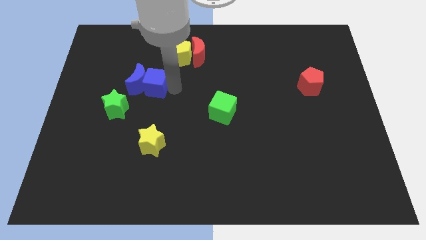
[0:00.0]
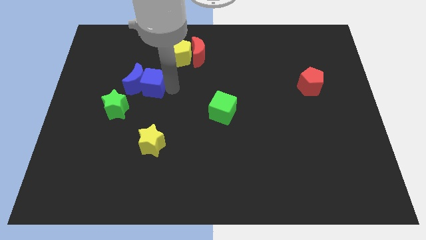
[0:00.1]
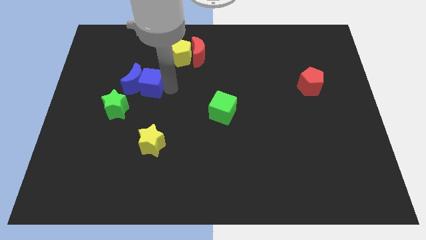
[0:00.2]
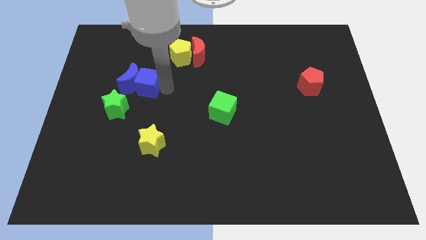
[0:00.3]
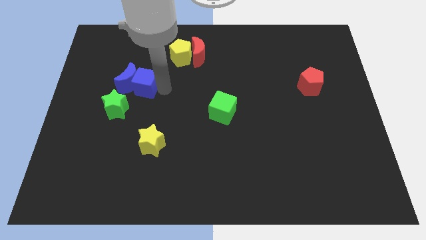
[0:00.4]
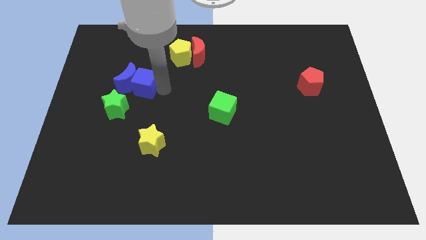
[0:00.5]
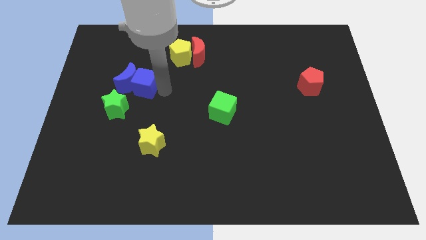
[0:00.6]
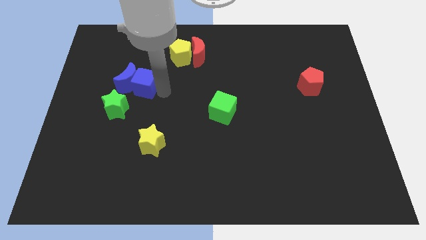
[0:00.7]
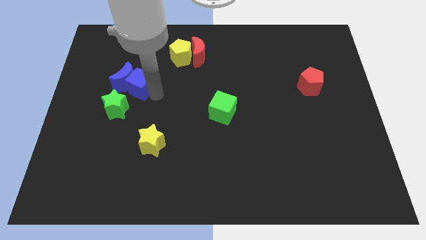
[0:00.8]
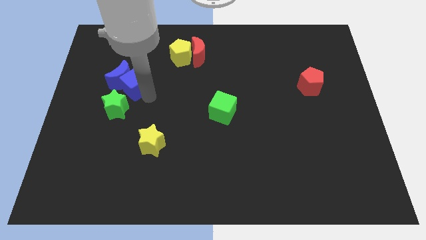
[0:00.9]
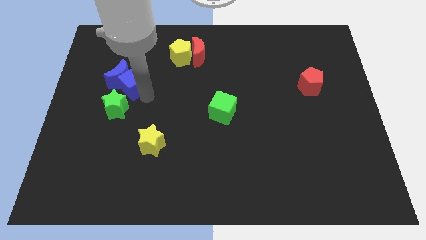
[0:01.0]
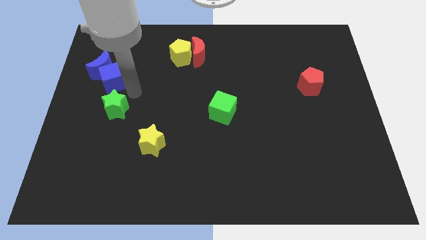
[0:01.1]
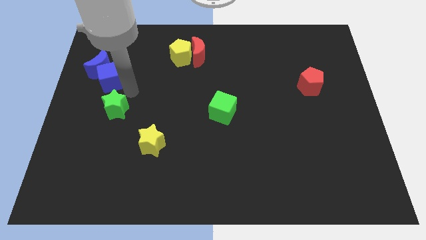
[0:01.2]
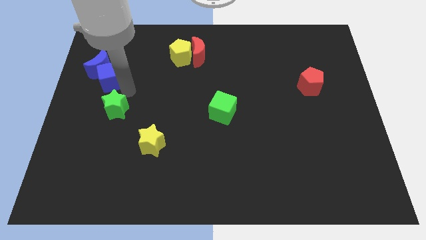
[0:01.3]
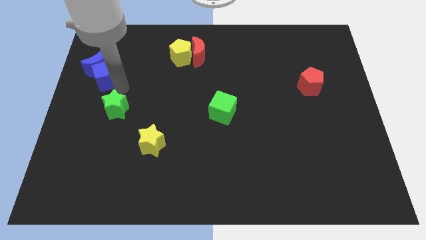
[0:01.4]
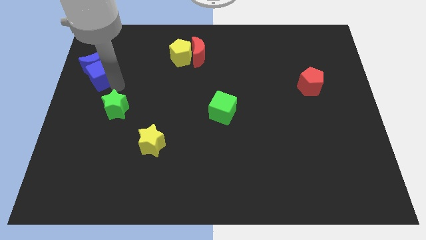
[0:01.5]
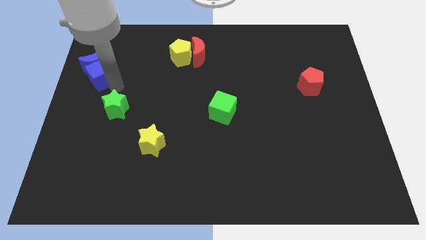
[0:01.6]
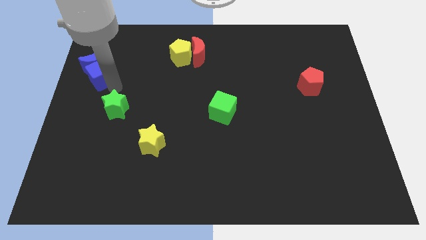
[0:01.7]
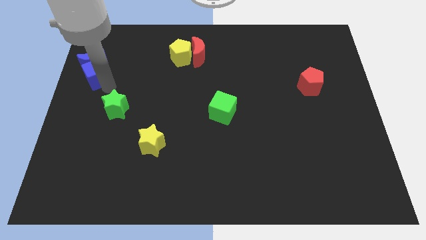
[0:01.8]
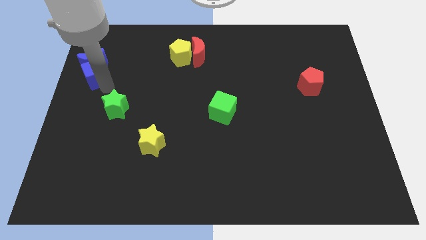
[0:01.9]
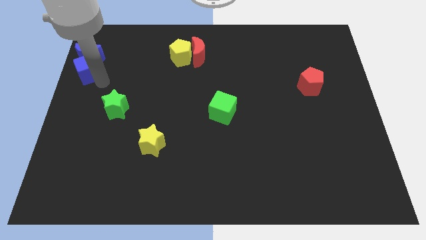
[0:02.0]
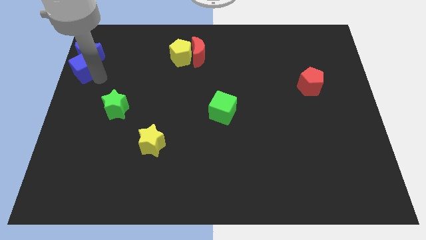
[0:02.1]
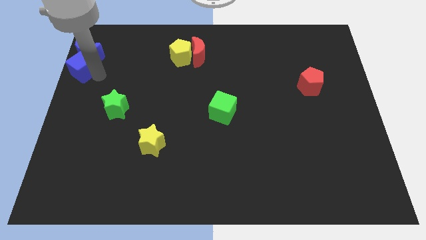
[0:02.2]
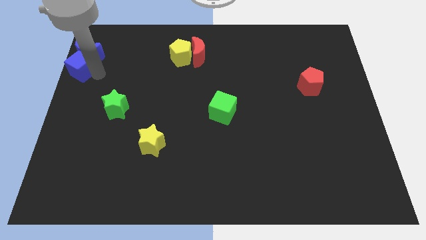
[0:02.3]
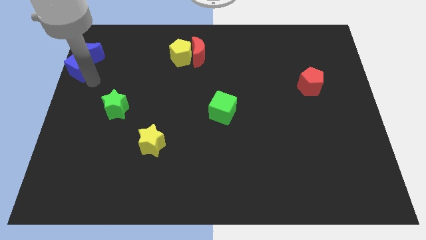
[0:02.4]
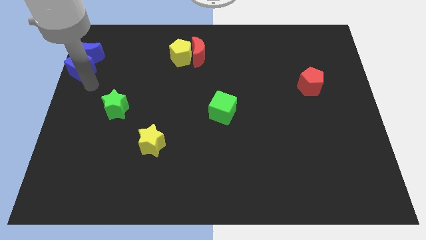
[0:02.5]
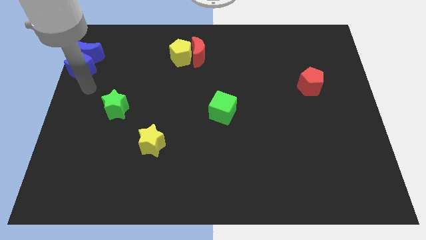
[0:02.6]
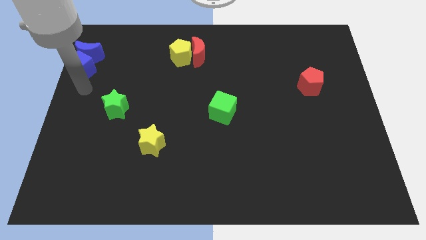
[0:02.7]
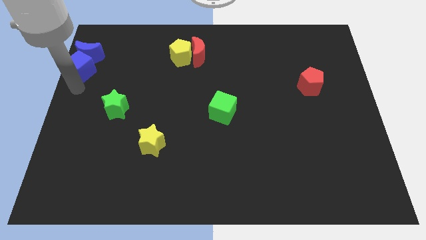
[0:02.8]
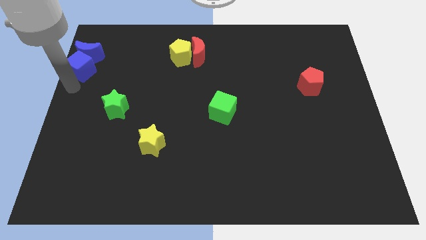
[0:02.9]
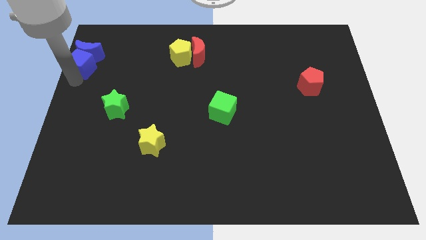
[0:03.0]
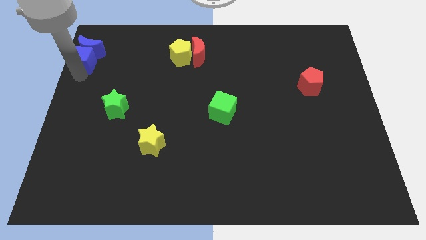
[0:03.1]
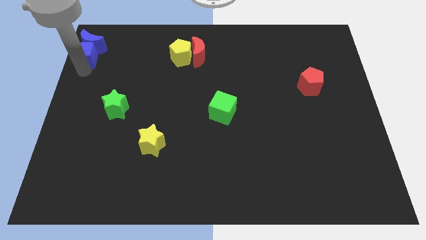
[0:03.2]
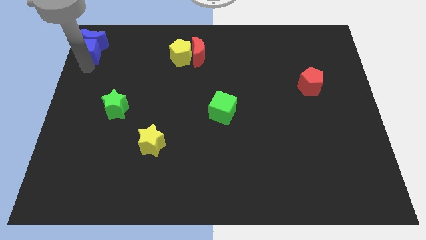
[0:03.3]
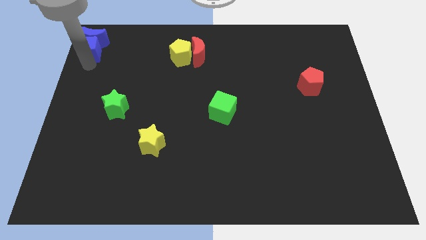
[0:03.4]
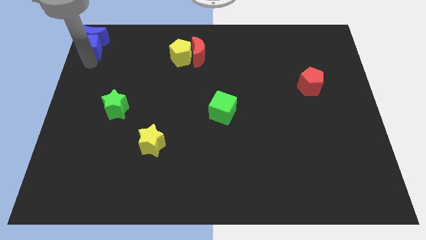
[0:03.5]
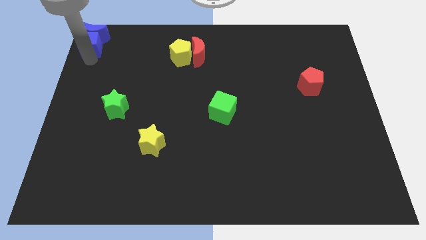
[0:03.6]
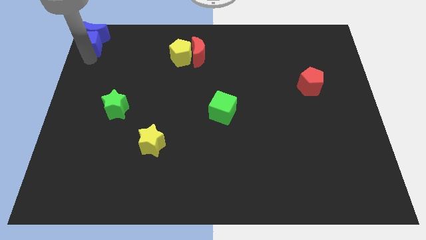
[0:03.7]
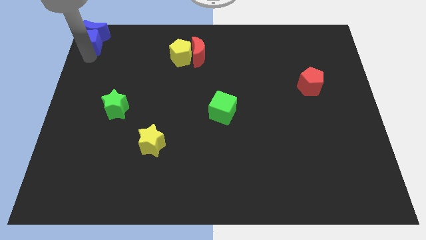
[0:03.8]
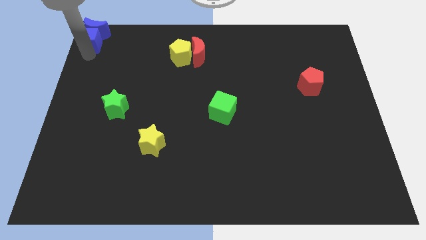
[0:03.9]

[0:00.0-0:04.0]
push the blue cube along with the blue crescent to the top corner of the board

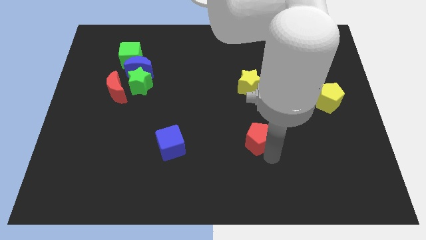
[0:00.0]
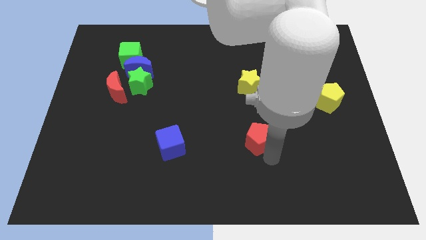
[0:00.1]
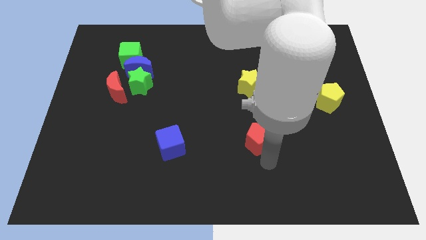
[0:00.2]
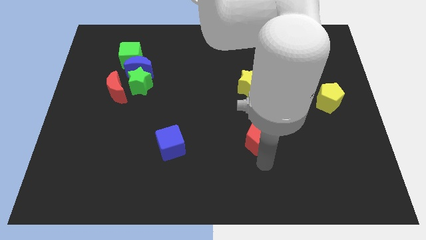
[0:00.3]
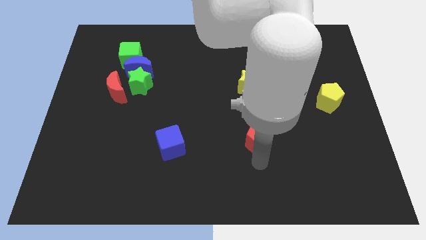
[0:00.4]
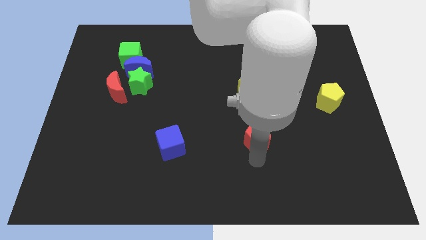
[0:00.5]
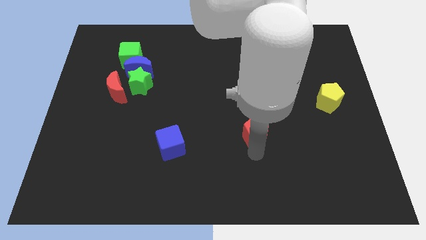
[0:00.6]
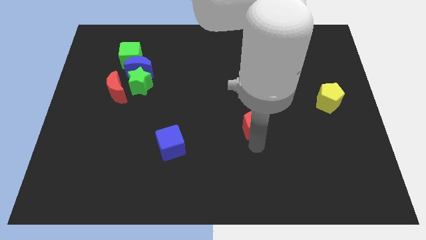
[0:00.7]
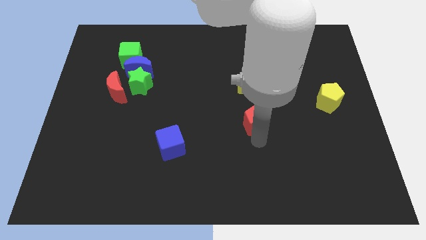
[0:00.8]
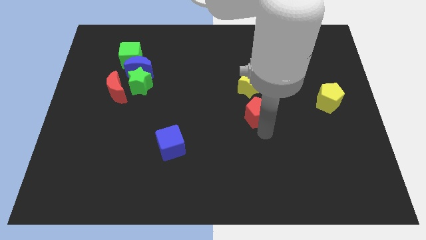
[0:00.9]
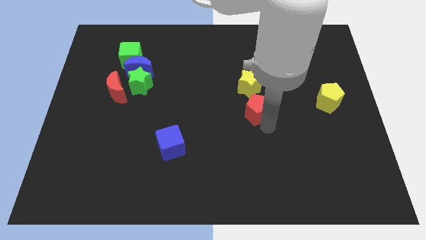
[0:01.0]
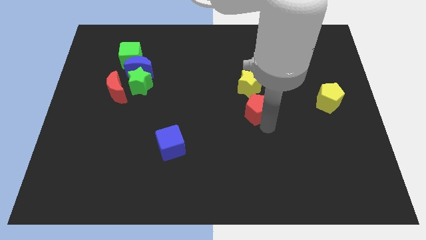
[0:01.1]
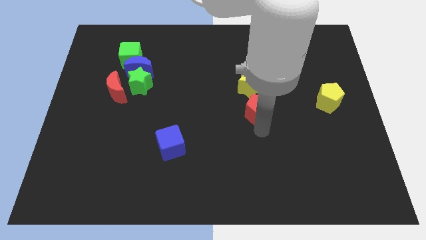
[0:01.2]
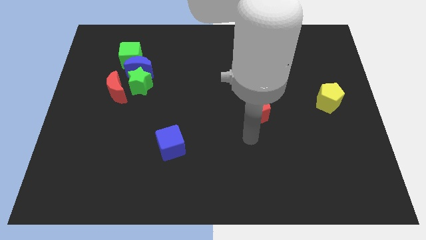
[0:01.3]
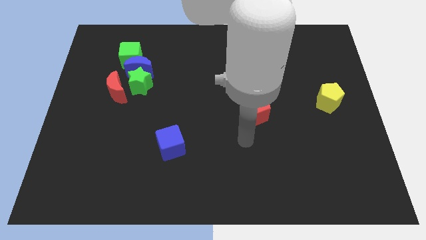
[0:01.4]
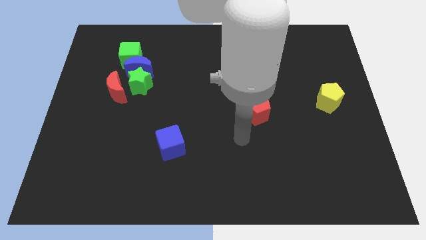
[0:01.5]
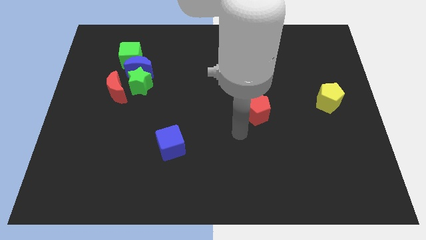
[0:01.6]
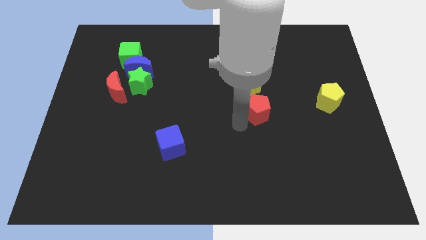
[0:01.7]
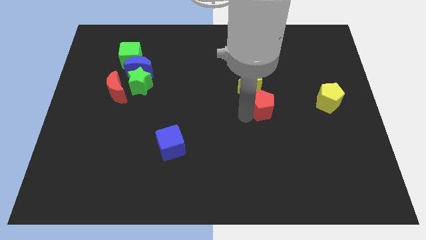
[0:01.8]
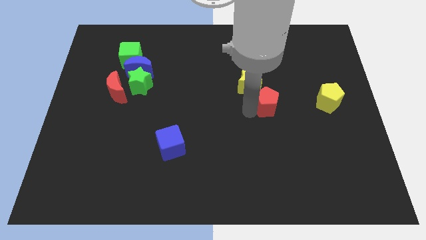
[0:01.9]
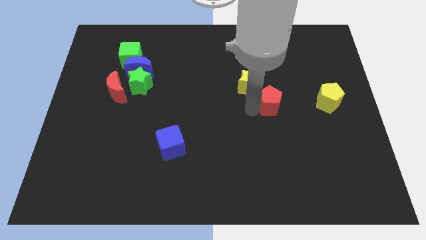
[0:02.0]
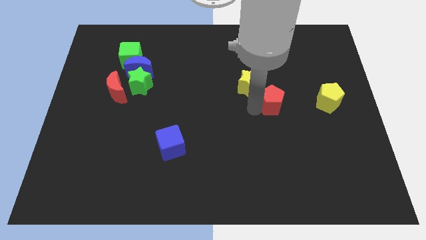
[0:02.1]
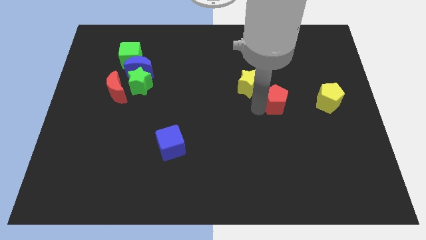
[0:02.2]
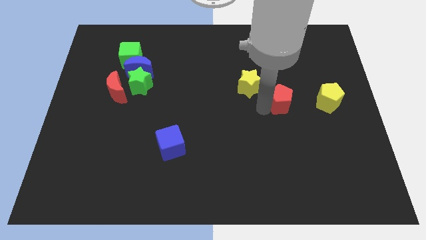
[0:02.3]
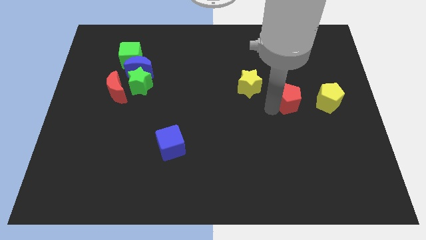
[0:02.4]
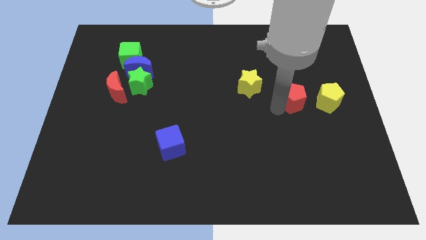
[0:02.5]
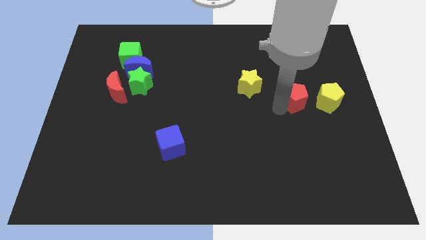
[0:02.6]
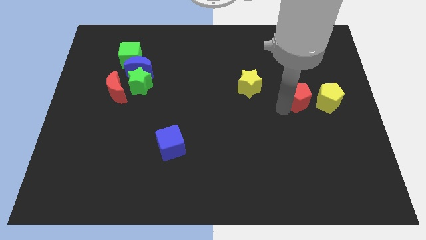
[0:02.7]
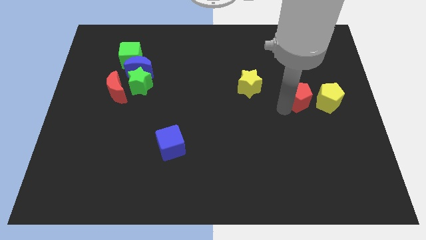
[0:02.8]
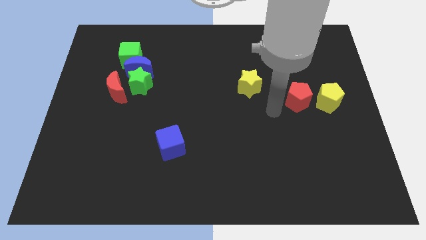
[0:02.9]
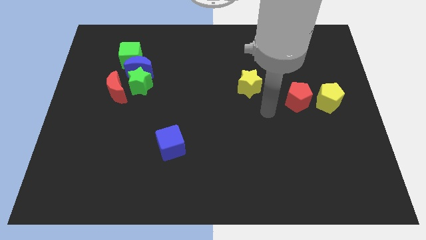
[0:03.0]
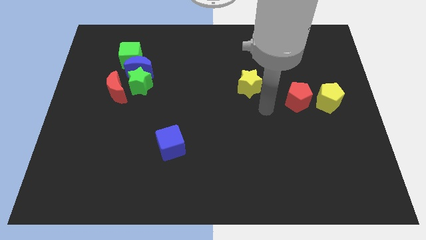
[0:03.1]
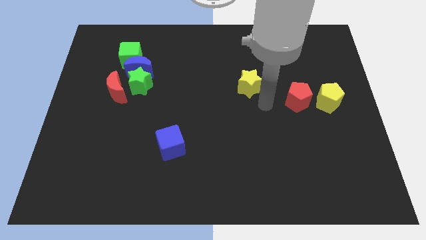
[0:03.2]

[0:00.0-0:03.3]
put the red pentagon to the left of the yellow pentagon

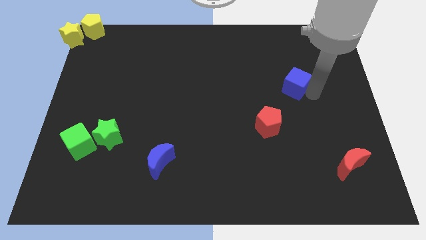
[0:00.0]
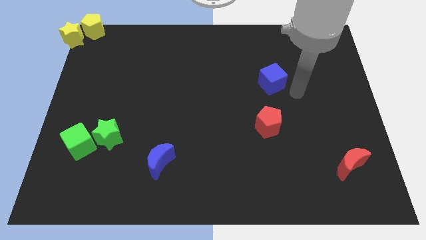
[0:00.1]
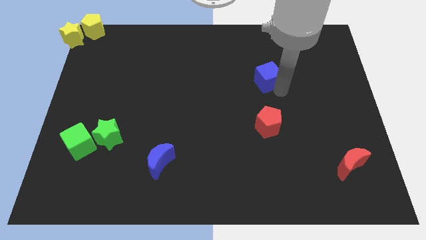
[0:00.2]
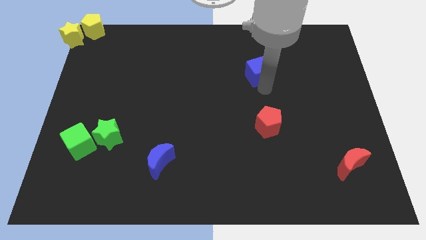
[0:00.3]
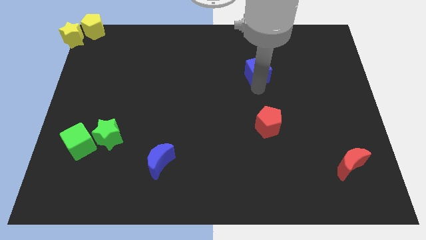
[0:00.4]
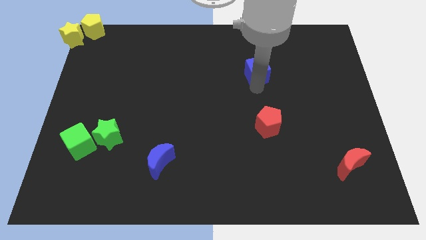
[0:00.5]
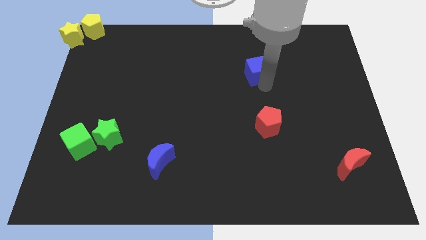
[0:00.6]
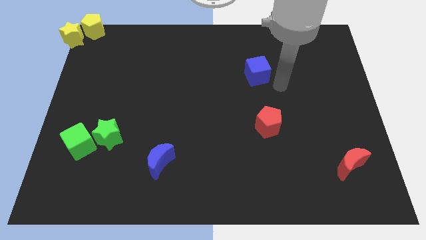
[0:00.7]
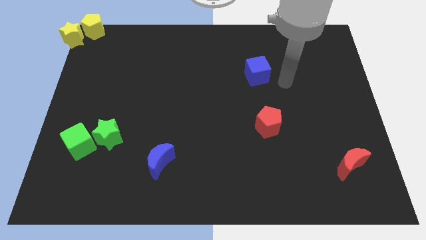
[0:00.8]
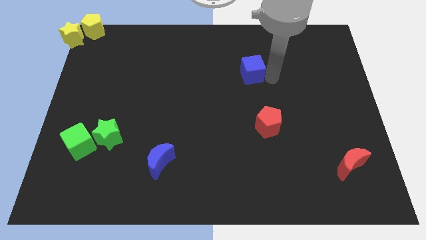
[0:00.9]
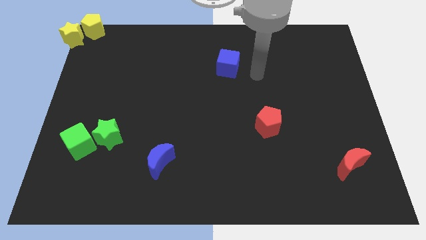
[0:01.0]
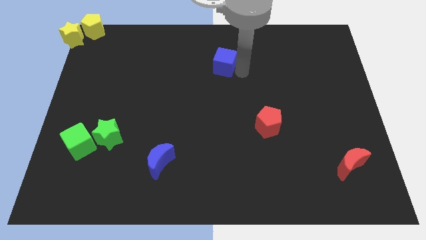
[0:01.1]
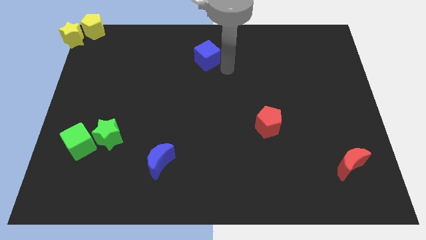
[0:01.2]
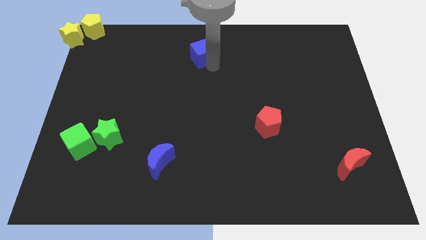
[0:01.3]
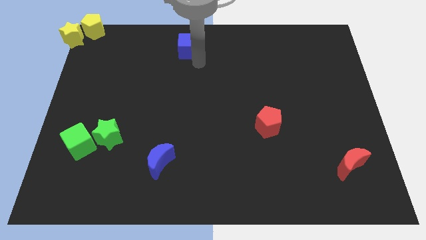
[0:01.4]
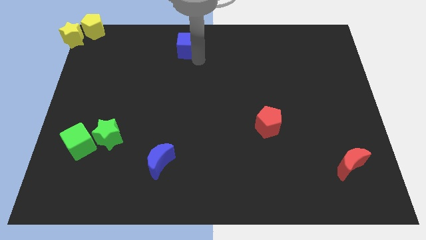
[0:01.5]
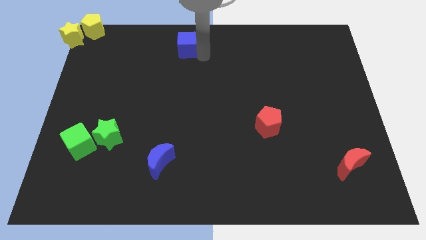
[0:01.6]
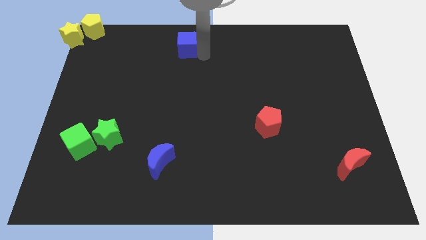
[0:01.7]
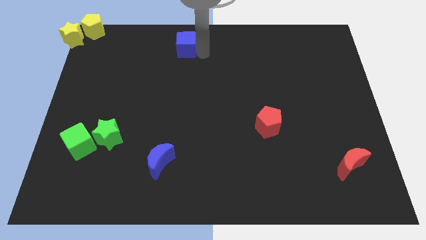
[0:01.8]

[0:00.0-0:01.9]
move the blue cube to the top center of the board
